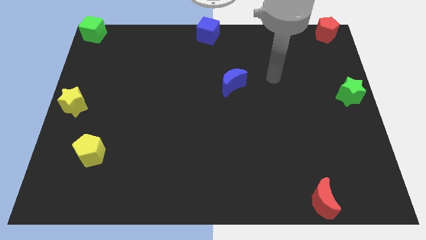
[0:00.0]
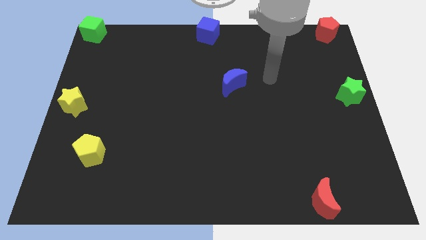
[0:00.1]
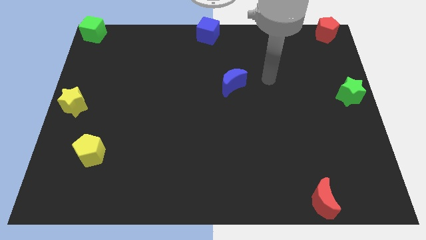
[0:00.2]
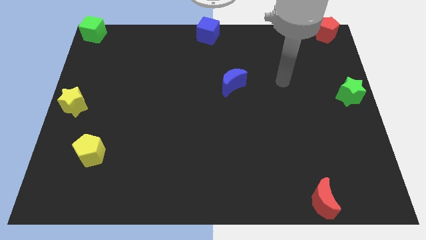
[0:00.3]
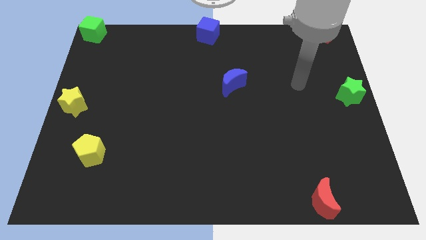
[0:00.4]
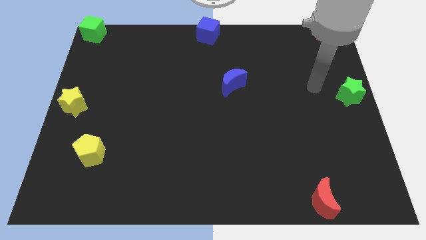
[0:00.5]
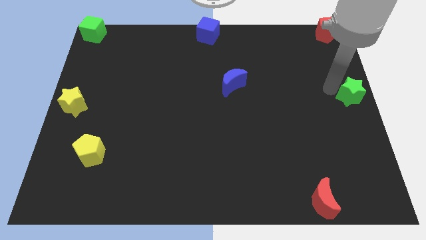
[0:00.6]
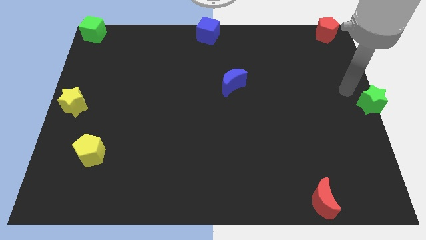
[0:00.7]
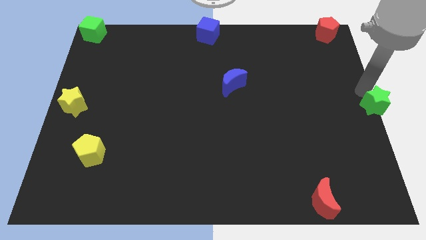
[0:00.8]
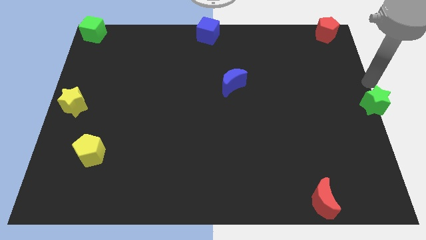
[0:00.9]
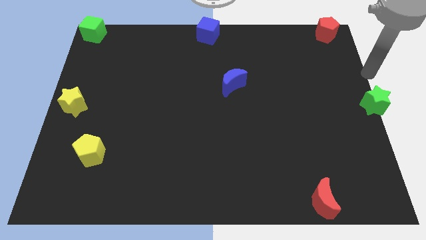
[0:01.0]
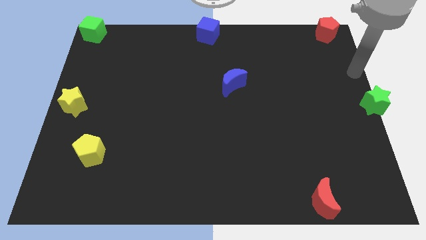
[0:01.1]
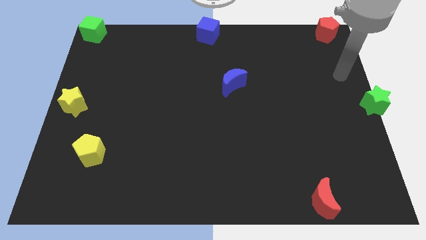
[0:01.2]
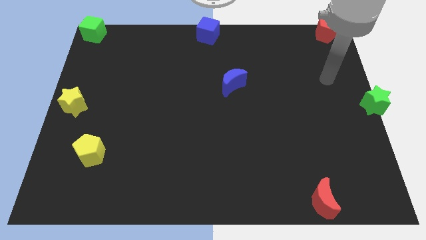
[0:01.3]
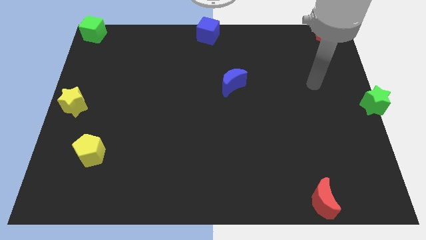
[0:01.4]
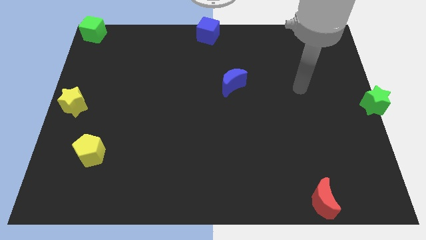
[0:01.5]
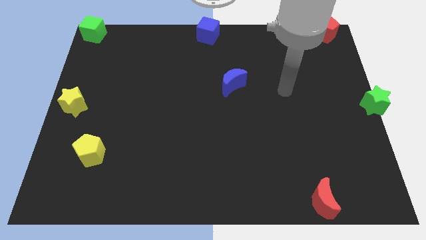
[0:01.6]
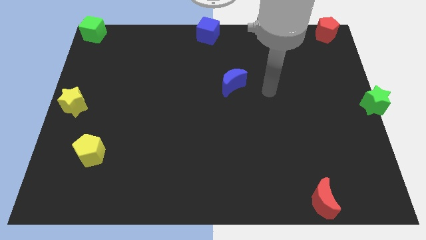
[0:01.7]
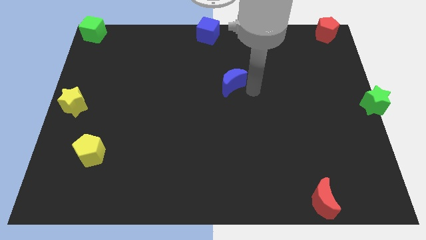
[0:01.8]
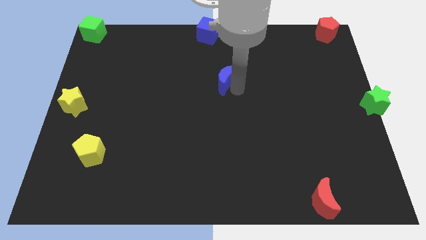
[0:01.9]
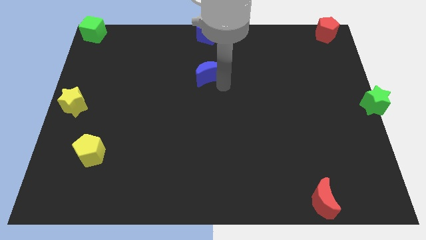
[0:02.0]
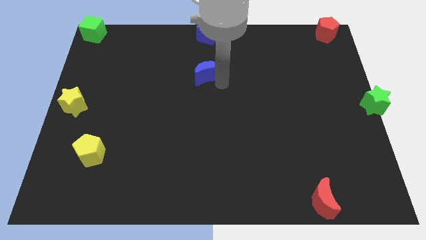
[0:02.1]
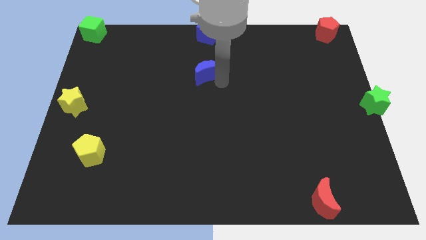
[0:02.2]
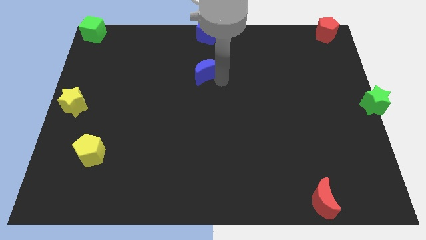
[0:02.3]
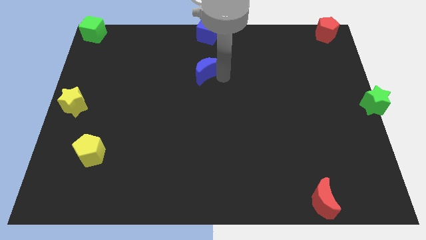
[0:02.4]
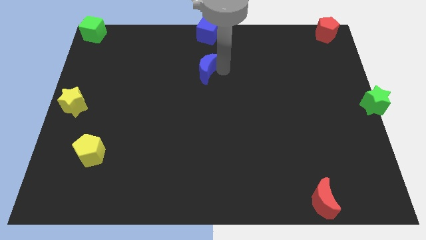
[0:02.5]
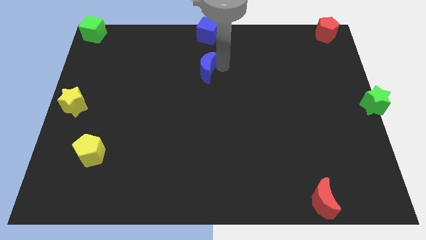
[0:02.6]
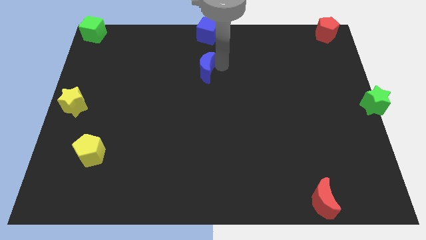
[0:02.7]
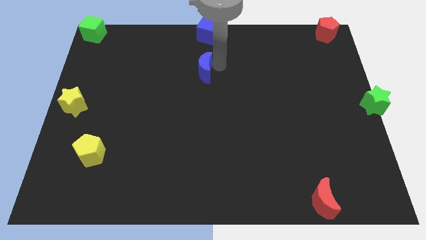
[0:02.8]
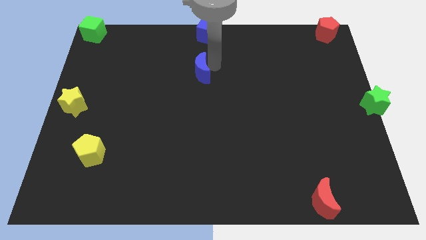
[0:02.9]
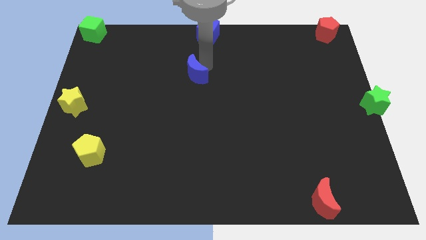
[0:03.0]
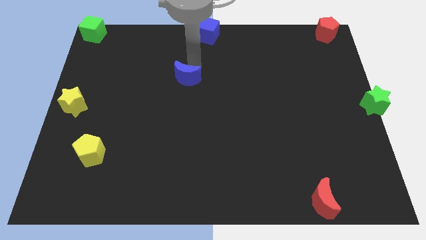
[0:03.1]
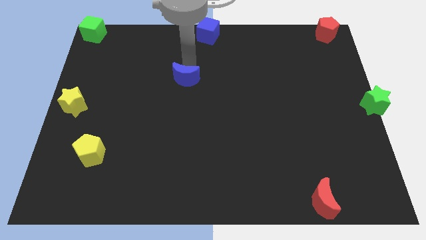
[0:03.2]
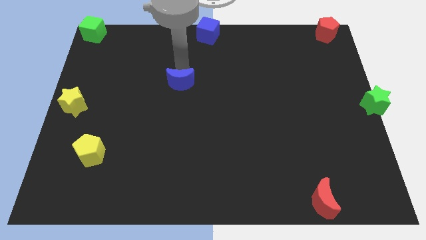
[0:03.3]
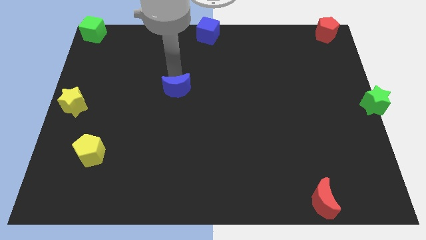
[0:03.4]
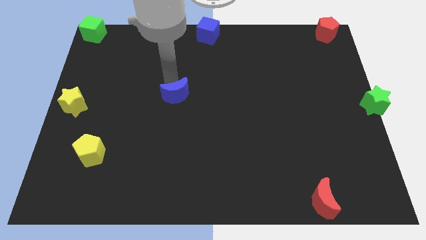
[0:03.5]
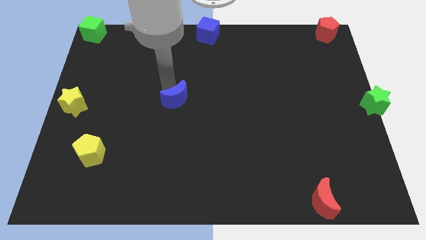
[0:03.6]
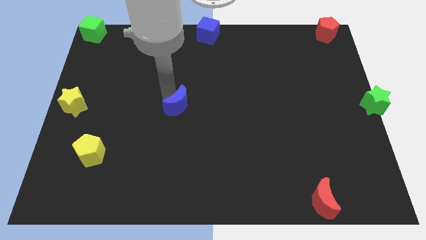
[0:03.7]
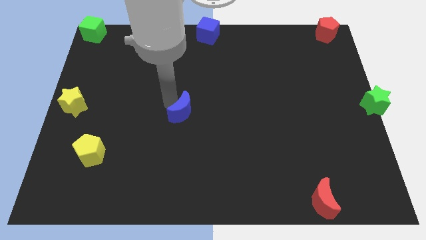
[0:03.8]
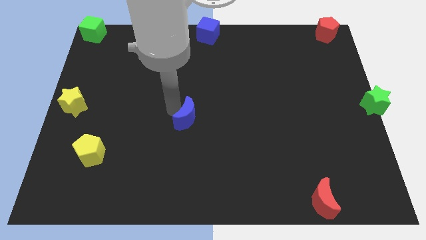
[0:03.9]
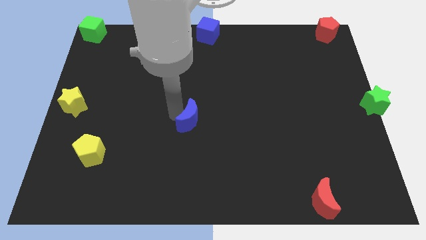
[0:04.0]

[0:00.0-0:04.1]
push the blue moon slightly downwards

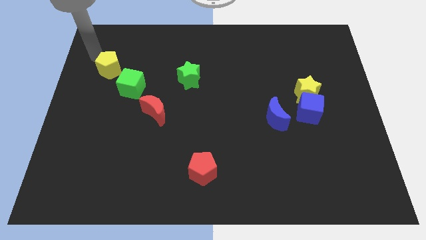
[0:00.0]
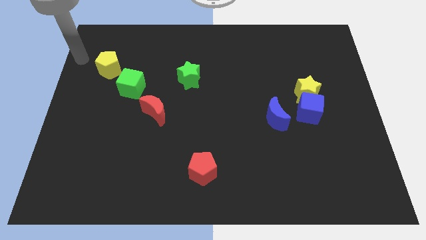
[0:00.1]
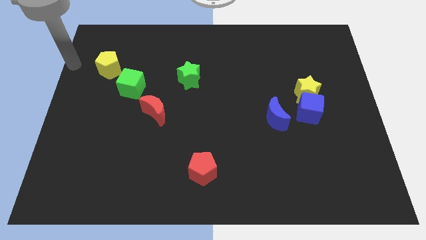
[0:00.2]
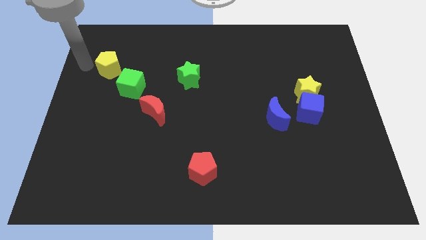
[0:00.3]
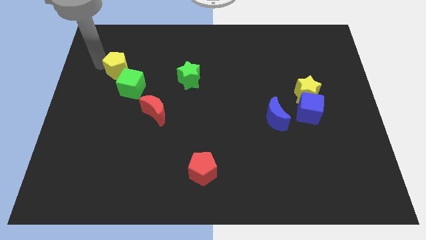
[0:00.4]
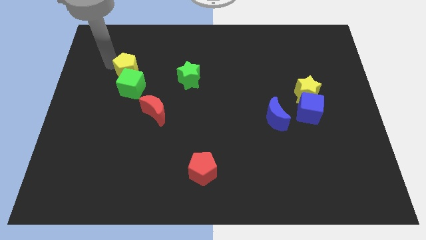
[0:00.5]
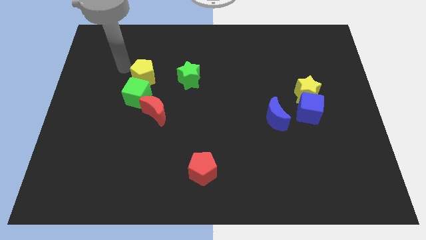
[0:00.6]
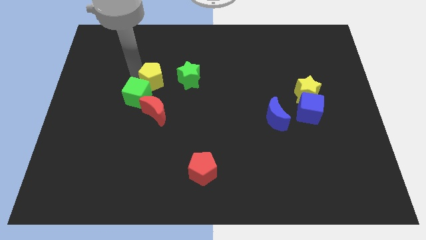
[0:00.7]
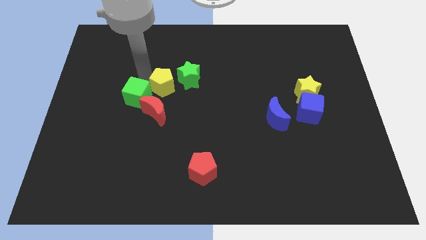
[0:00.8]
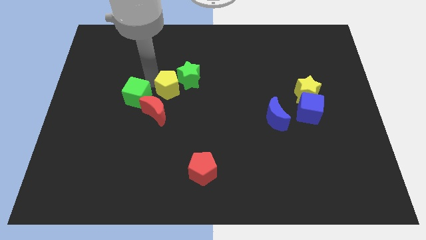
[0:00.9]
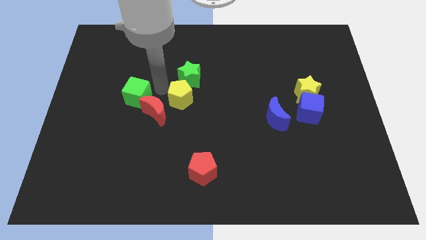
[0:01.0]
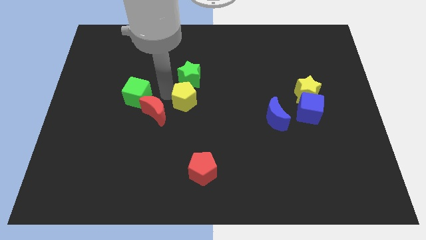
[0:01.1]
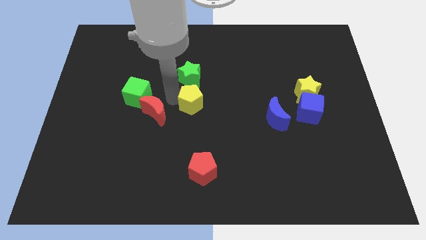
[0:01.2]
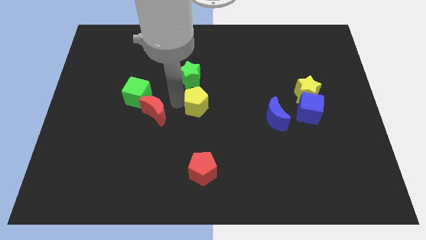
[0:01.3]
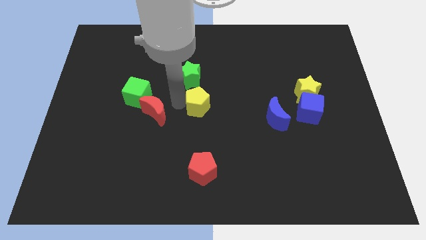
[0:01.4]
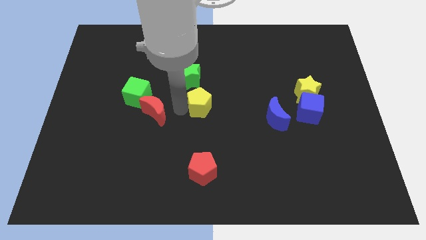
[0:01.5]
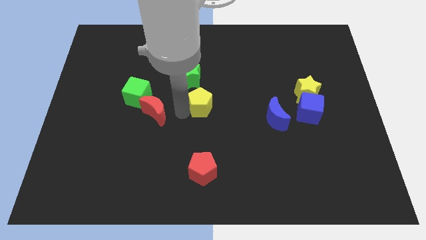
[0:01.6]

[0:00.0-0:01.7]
place the yellow pentagon to the center of the board

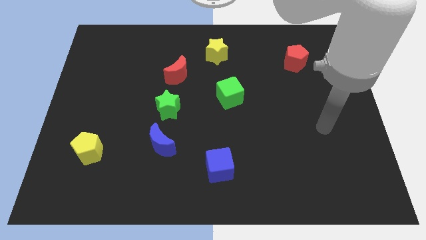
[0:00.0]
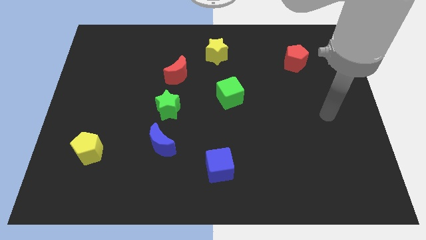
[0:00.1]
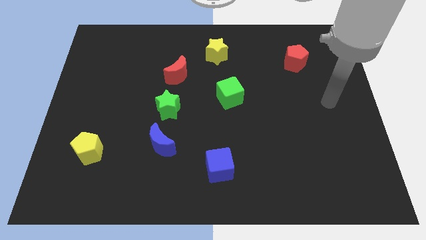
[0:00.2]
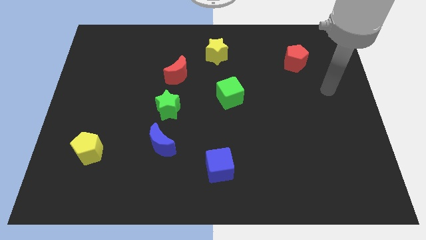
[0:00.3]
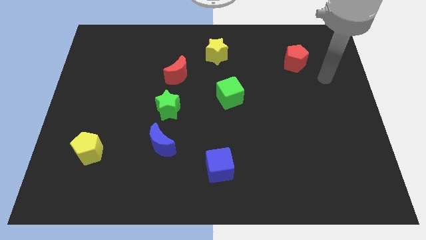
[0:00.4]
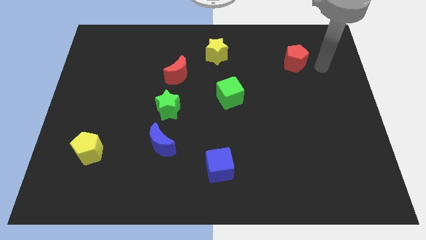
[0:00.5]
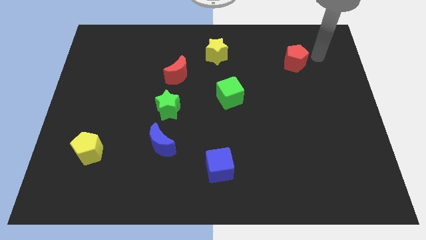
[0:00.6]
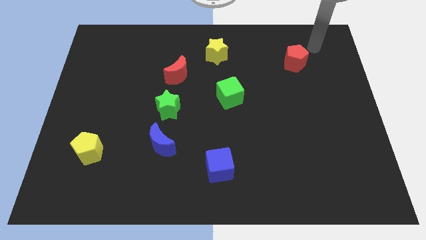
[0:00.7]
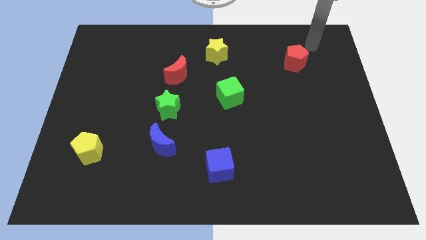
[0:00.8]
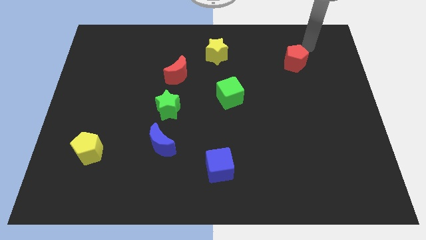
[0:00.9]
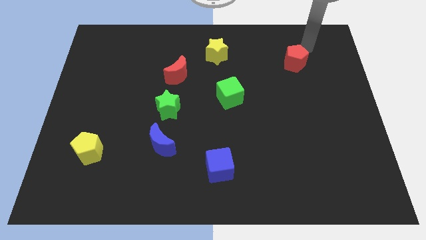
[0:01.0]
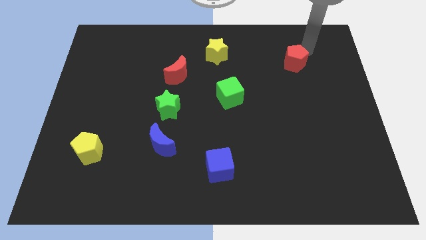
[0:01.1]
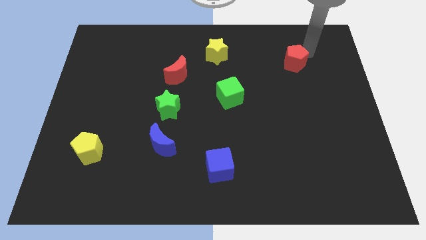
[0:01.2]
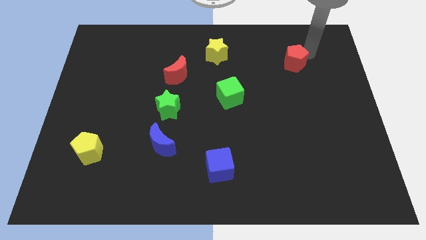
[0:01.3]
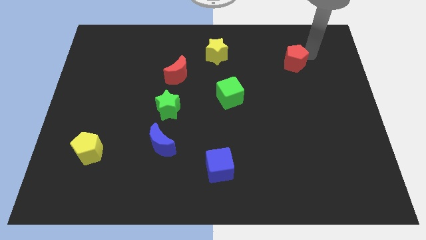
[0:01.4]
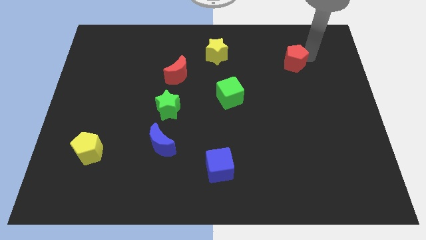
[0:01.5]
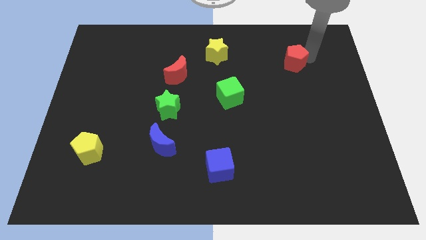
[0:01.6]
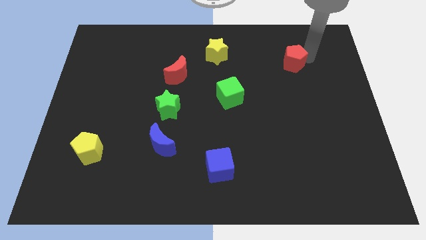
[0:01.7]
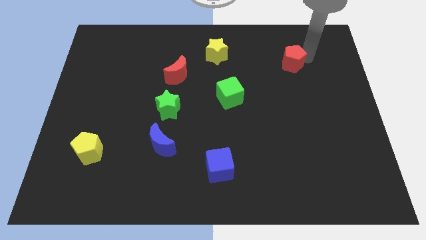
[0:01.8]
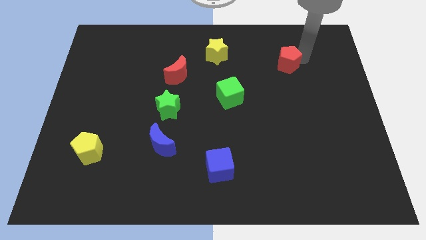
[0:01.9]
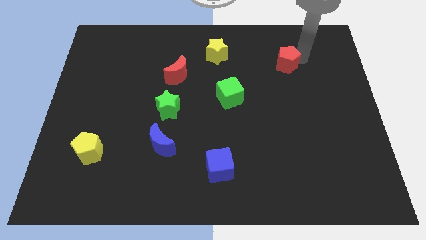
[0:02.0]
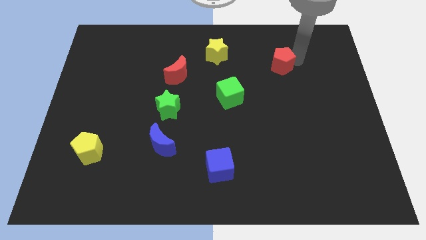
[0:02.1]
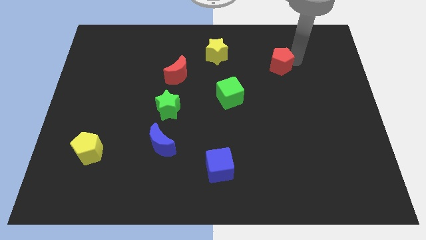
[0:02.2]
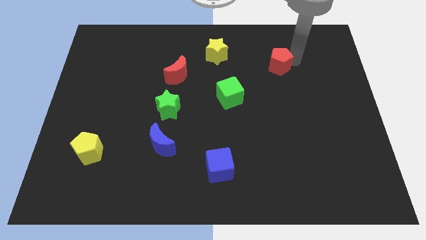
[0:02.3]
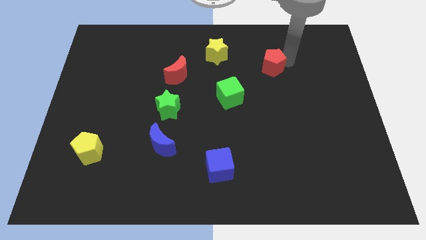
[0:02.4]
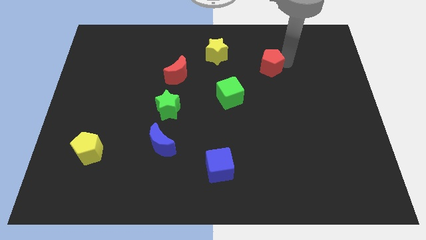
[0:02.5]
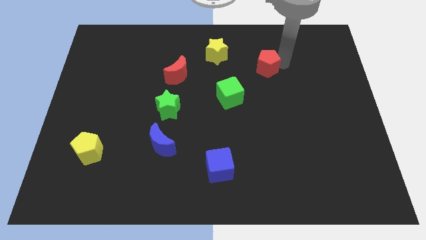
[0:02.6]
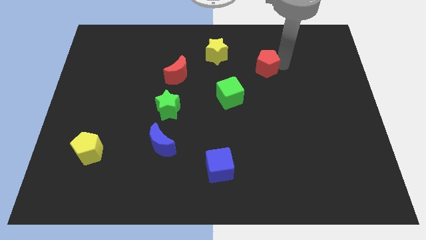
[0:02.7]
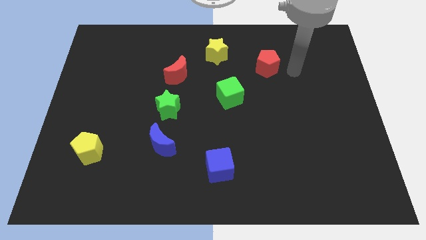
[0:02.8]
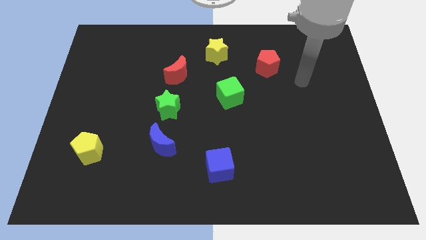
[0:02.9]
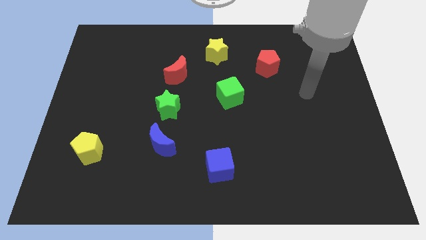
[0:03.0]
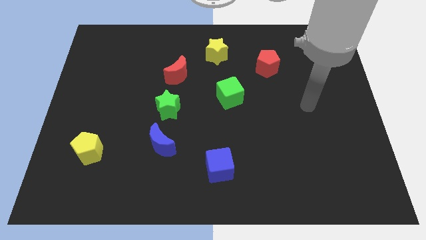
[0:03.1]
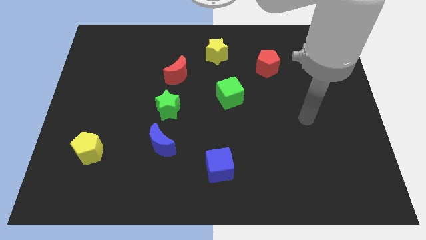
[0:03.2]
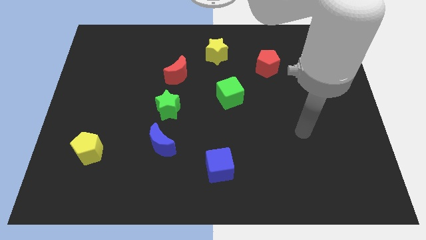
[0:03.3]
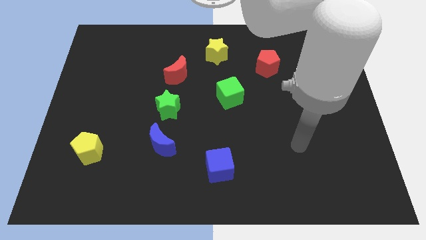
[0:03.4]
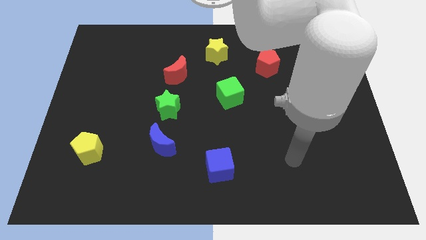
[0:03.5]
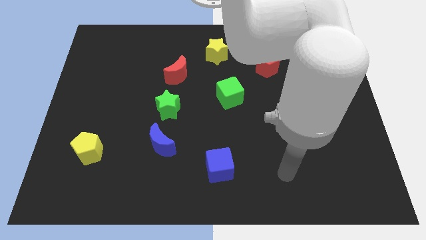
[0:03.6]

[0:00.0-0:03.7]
slide the red pentagon diagonally on the top right side of the green cube
